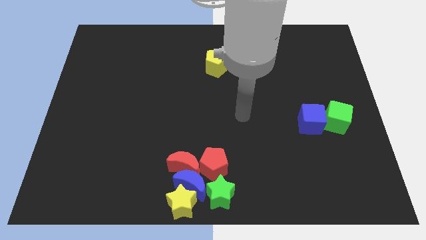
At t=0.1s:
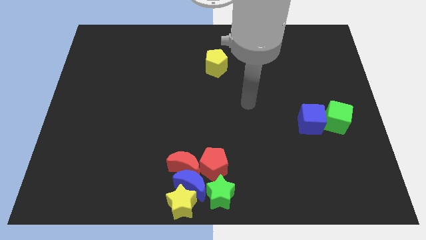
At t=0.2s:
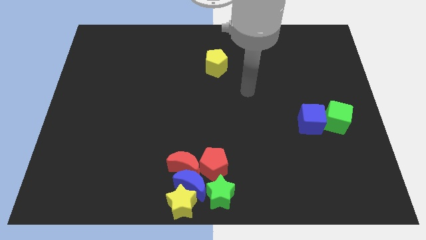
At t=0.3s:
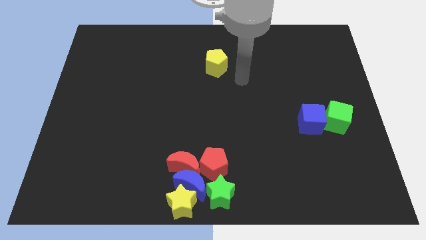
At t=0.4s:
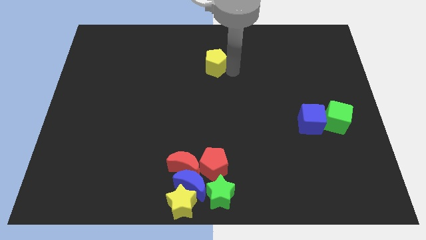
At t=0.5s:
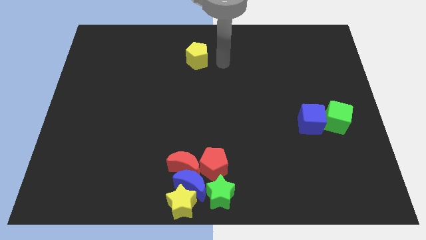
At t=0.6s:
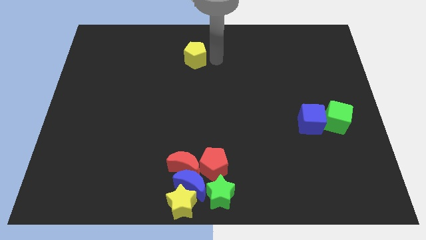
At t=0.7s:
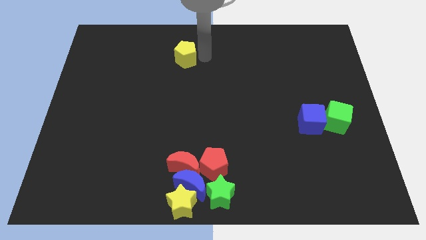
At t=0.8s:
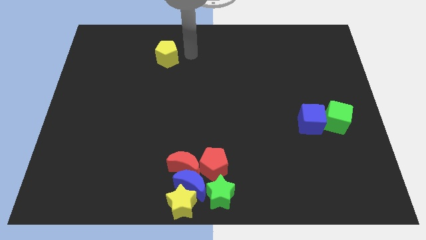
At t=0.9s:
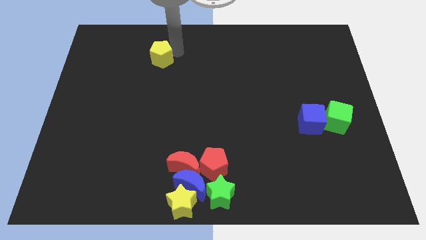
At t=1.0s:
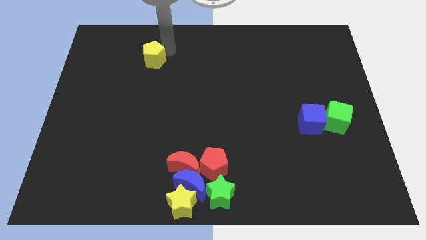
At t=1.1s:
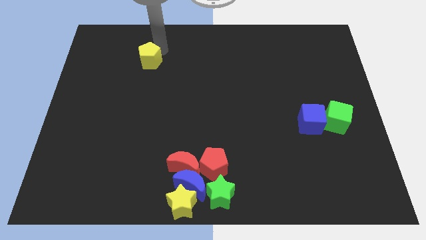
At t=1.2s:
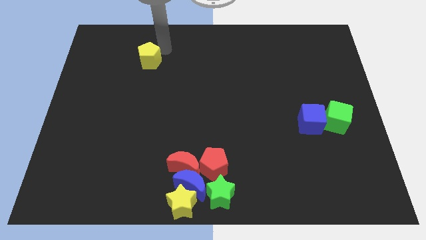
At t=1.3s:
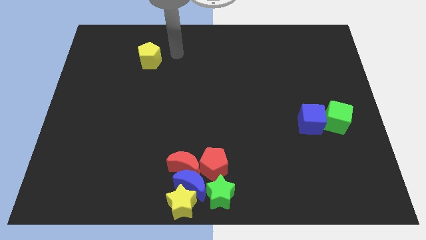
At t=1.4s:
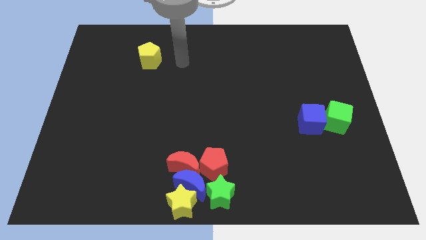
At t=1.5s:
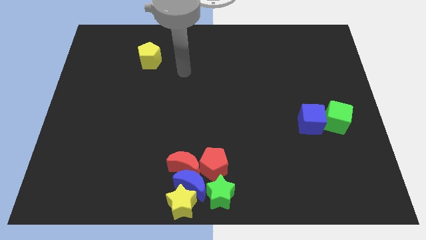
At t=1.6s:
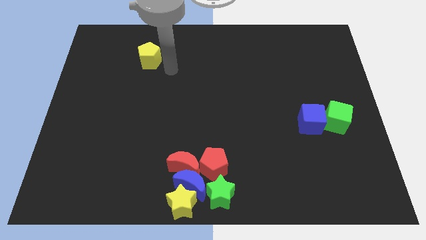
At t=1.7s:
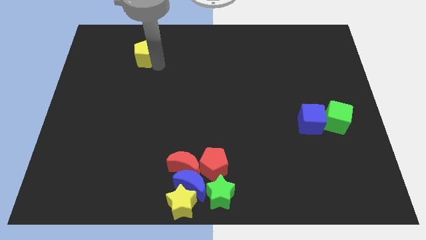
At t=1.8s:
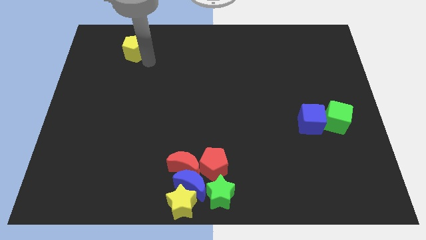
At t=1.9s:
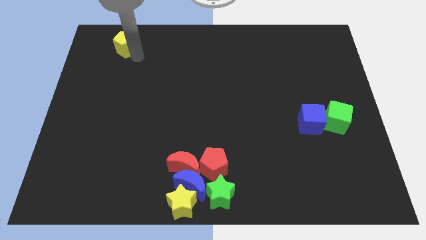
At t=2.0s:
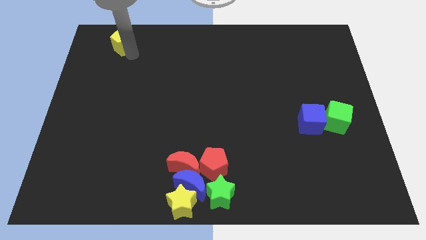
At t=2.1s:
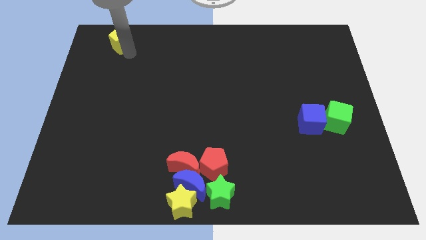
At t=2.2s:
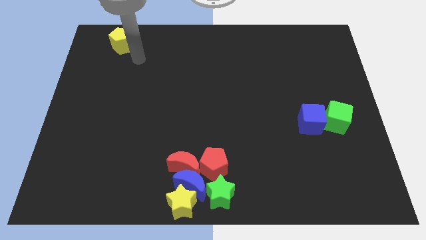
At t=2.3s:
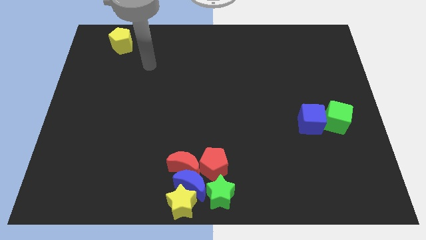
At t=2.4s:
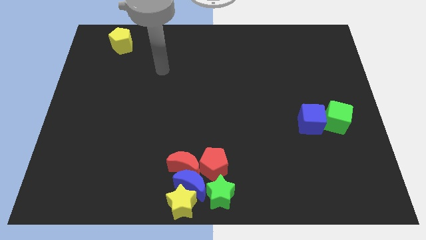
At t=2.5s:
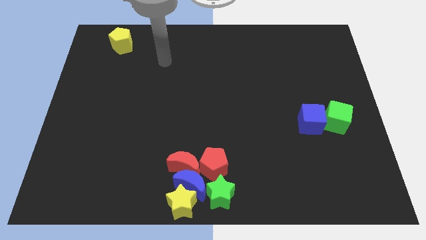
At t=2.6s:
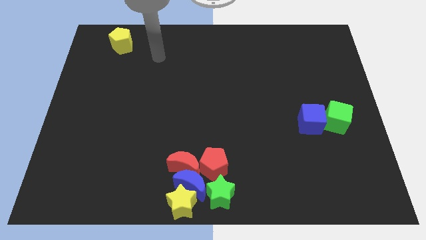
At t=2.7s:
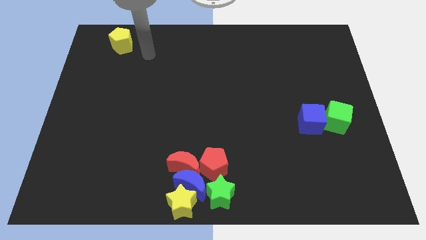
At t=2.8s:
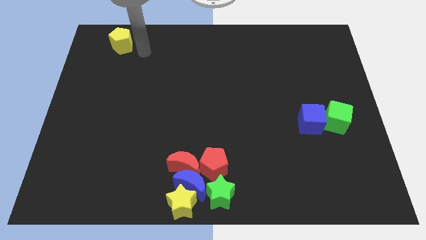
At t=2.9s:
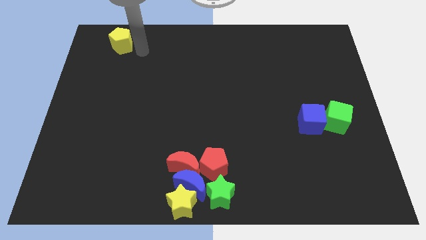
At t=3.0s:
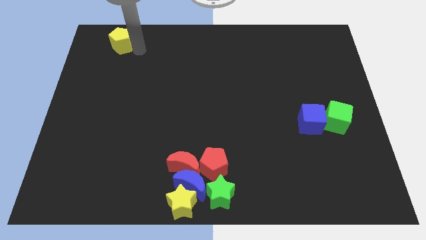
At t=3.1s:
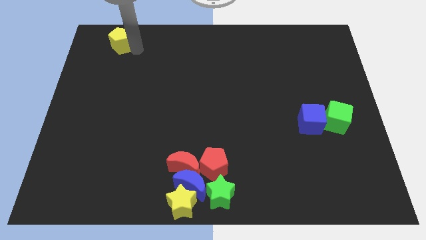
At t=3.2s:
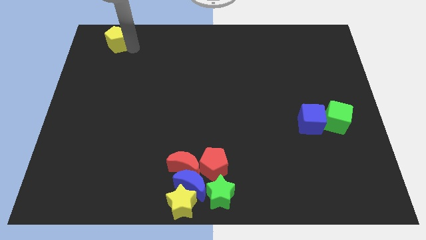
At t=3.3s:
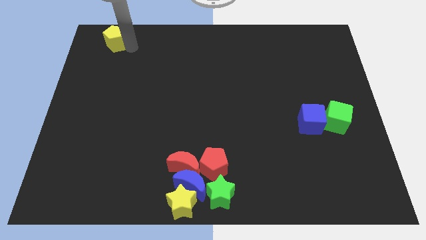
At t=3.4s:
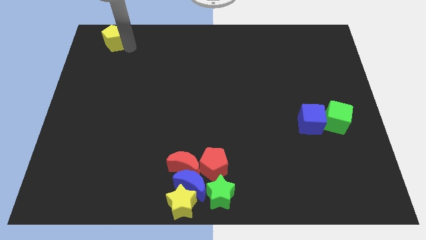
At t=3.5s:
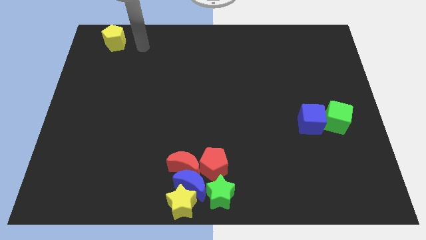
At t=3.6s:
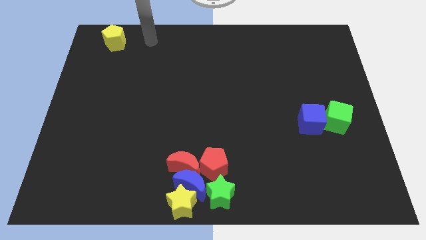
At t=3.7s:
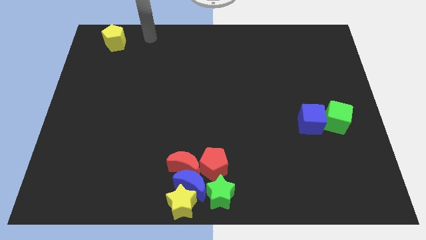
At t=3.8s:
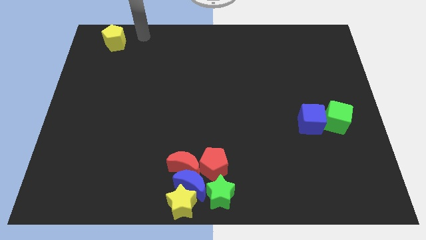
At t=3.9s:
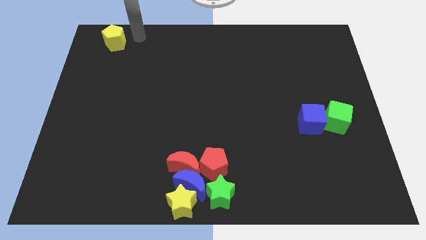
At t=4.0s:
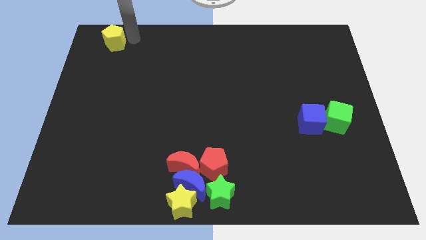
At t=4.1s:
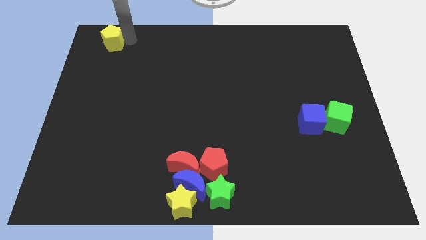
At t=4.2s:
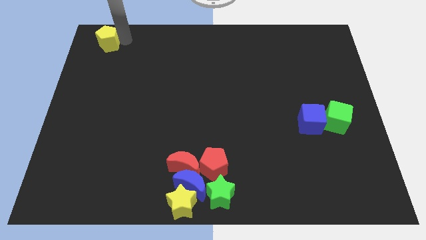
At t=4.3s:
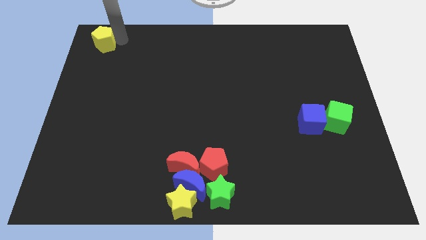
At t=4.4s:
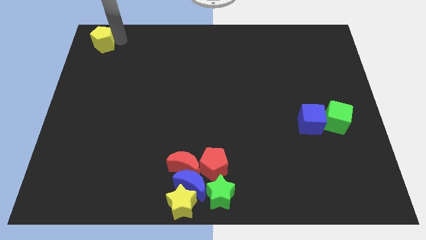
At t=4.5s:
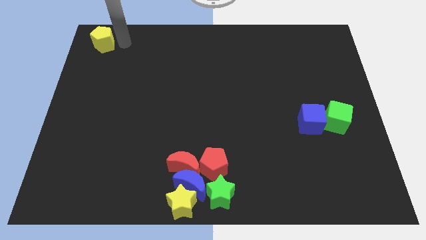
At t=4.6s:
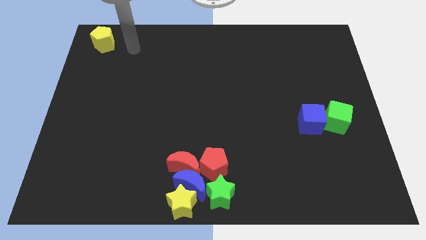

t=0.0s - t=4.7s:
push the yellow pentagon to the top left of the board

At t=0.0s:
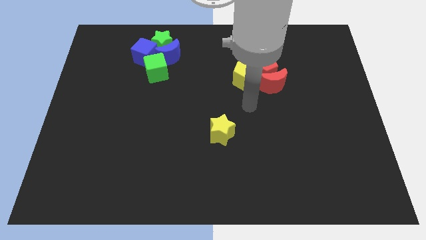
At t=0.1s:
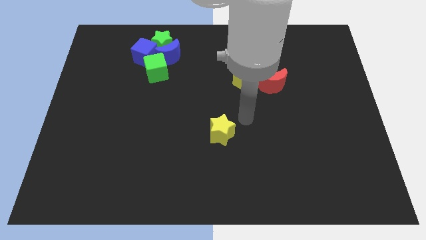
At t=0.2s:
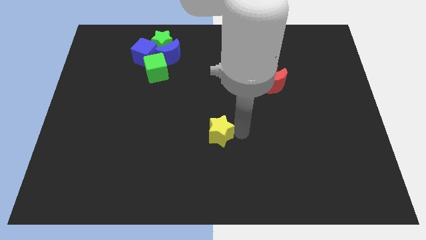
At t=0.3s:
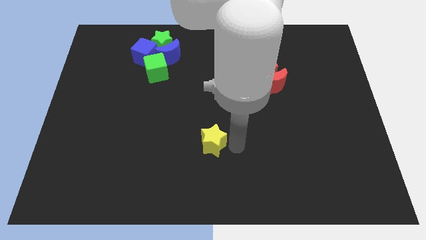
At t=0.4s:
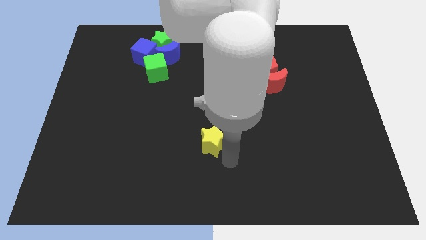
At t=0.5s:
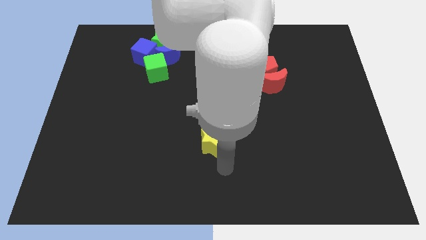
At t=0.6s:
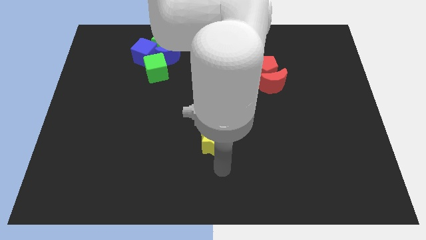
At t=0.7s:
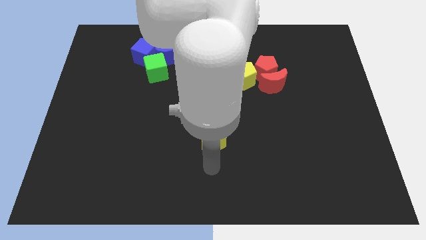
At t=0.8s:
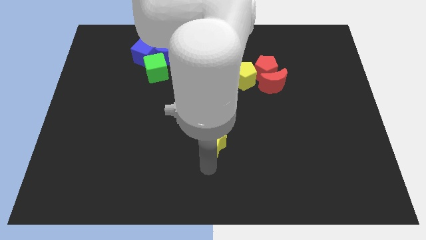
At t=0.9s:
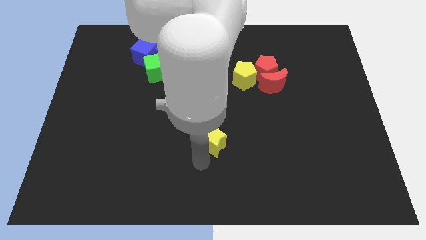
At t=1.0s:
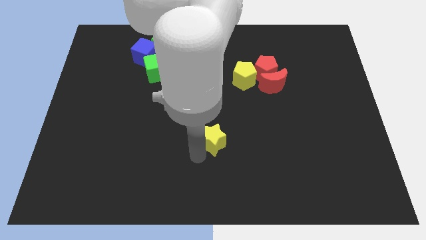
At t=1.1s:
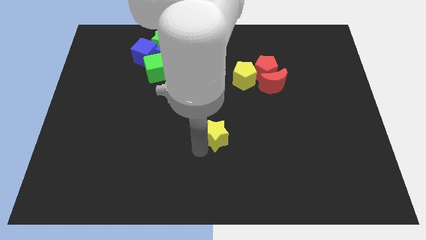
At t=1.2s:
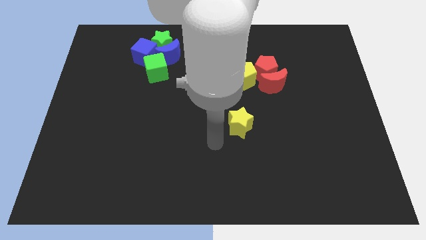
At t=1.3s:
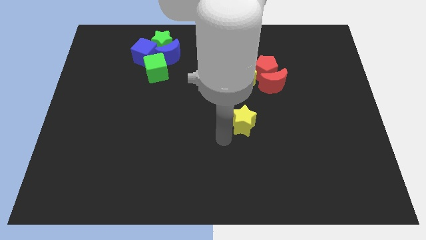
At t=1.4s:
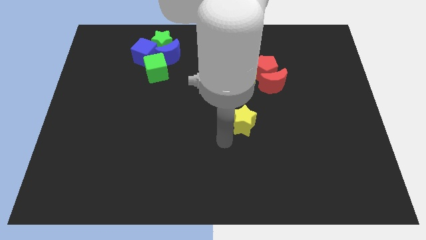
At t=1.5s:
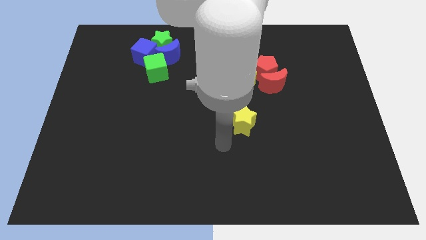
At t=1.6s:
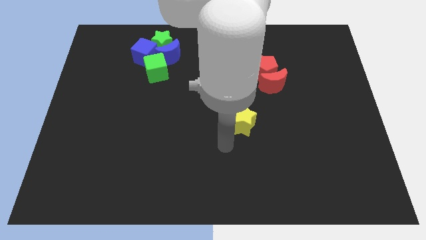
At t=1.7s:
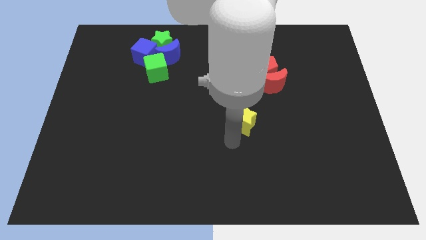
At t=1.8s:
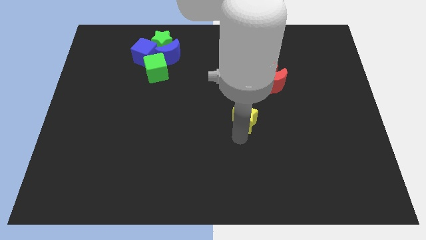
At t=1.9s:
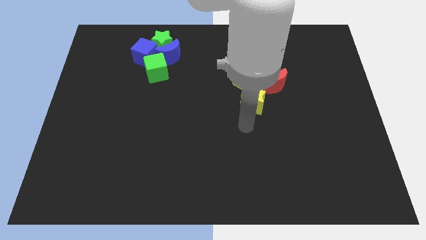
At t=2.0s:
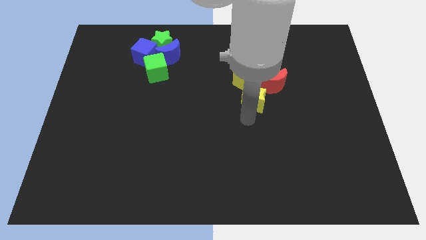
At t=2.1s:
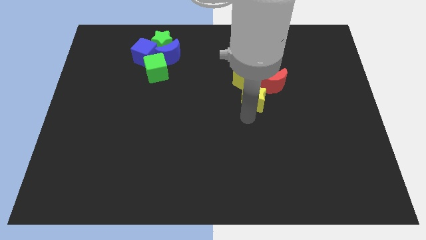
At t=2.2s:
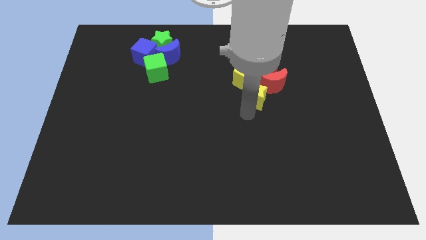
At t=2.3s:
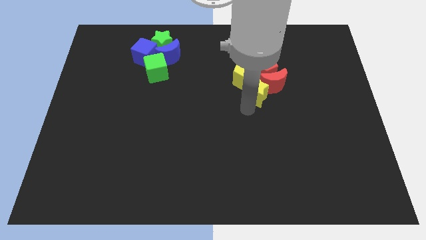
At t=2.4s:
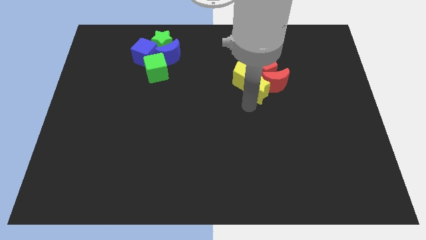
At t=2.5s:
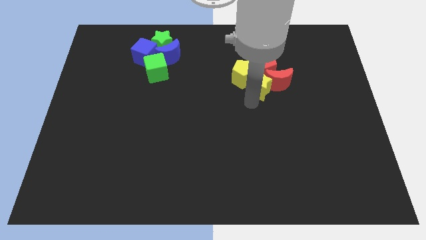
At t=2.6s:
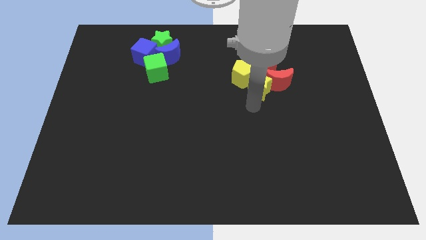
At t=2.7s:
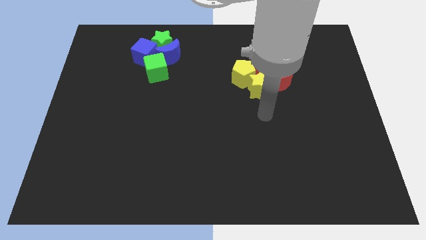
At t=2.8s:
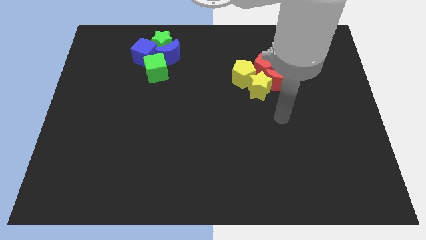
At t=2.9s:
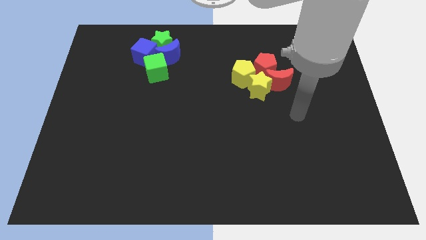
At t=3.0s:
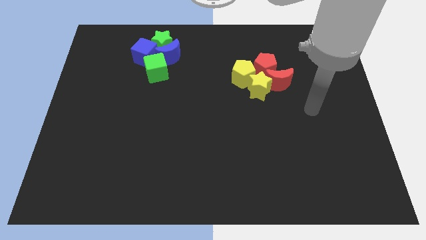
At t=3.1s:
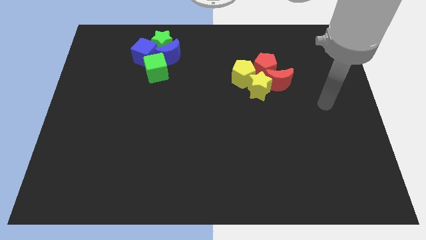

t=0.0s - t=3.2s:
attach the yellow star to the red crescent

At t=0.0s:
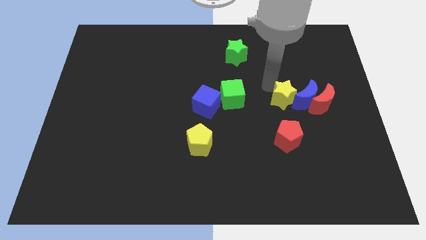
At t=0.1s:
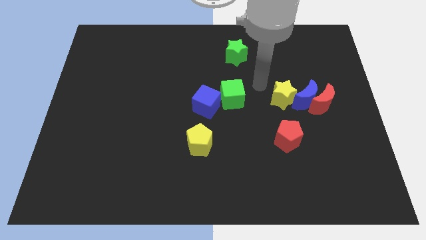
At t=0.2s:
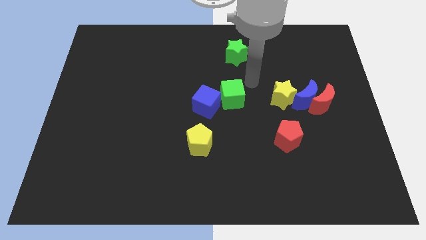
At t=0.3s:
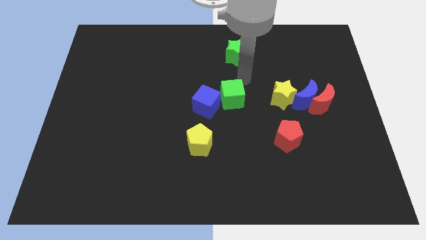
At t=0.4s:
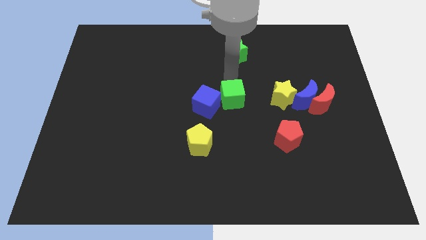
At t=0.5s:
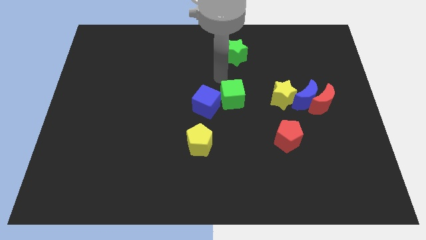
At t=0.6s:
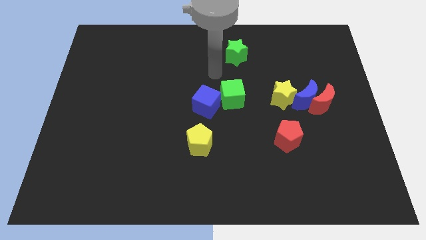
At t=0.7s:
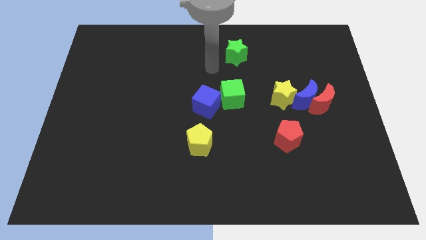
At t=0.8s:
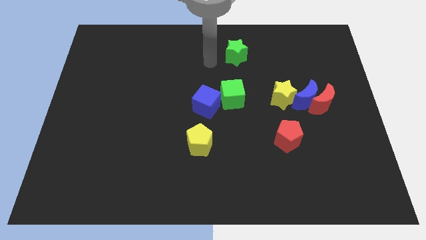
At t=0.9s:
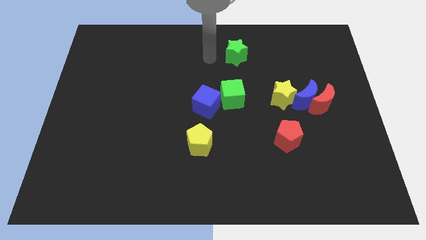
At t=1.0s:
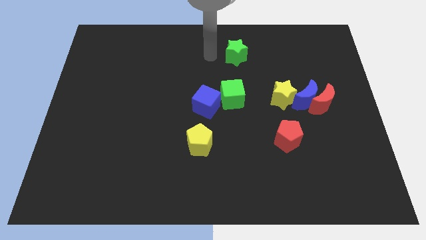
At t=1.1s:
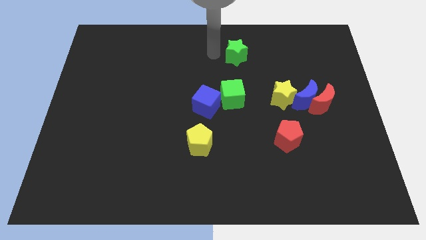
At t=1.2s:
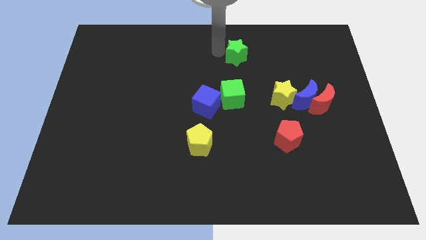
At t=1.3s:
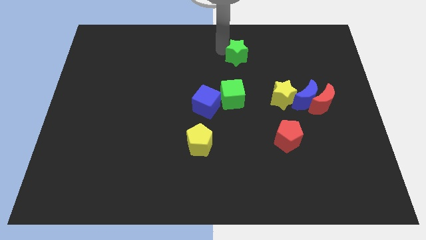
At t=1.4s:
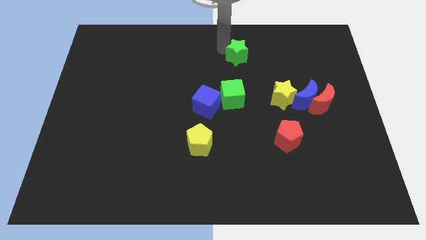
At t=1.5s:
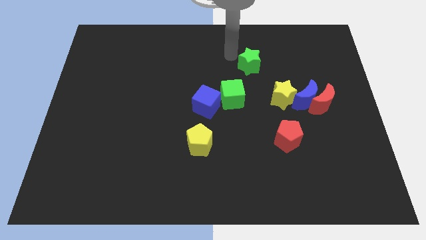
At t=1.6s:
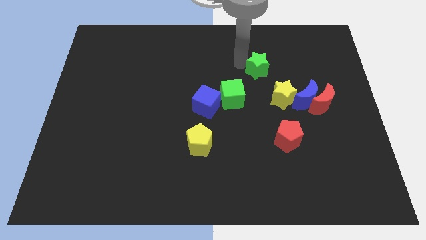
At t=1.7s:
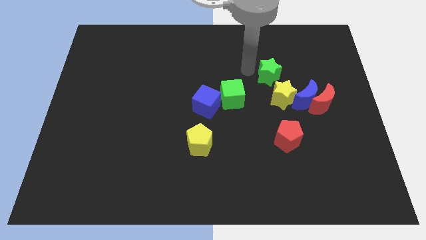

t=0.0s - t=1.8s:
push the green star close to the yellow star
